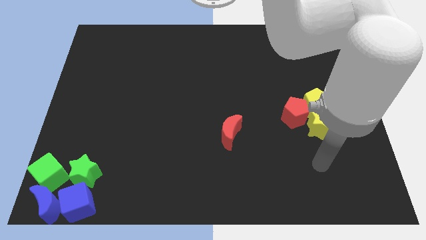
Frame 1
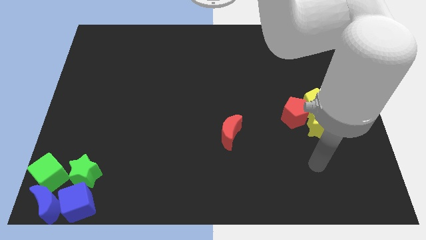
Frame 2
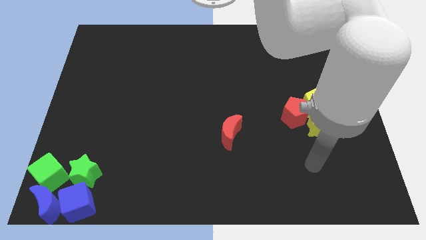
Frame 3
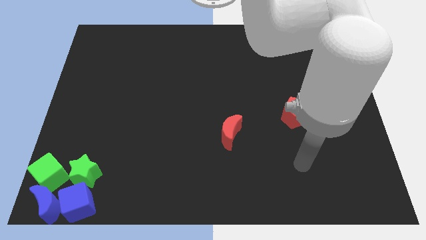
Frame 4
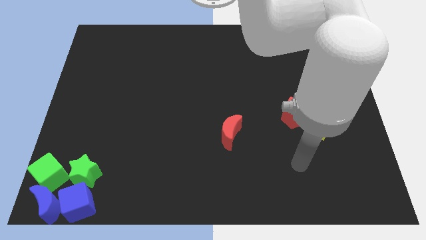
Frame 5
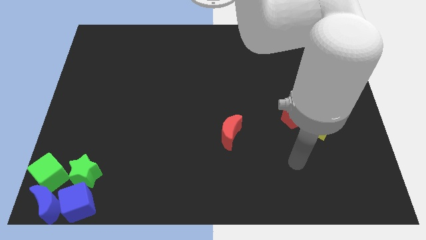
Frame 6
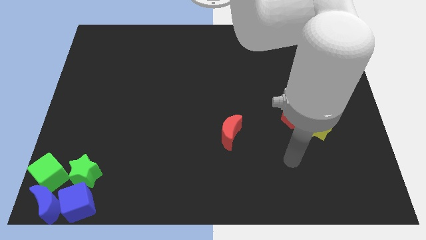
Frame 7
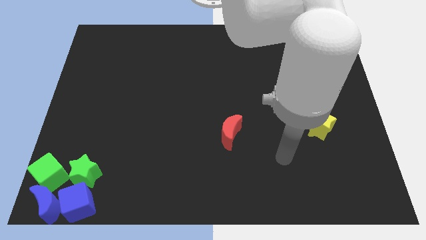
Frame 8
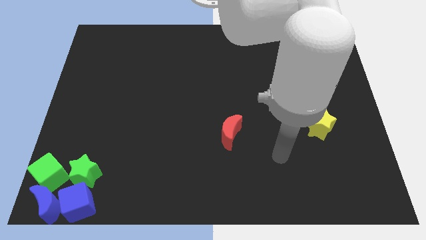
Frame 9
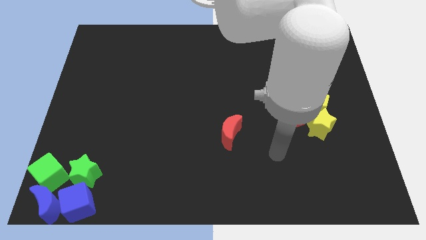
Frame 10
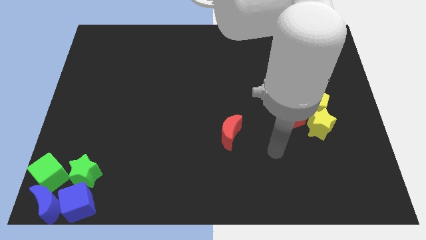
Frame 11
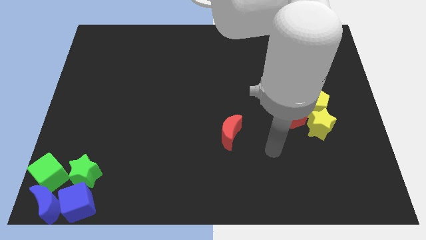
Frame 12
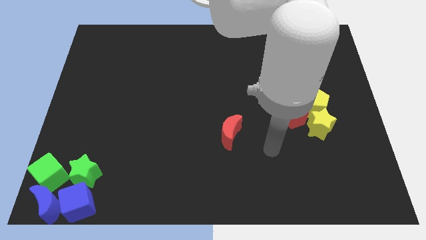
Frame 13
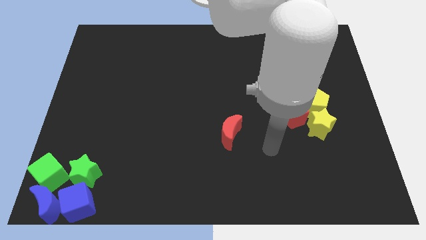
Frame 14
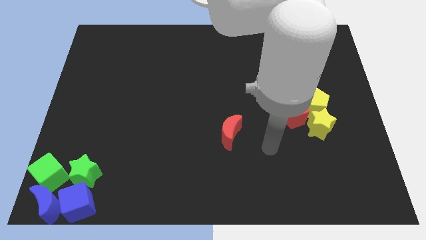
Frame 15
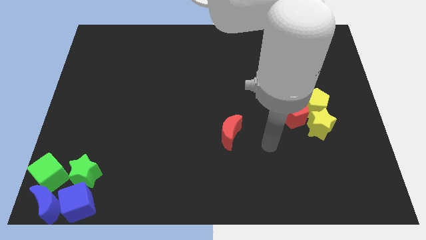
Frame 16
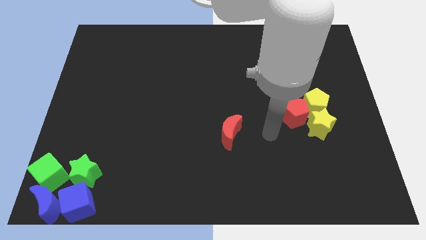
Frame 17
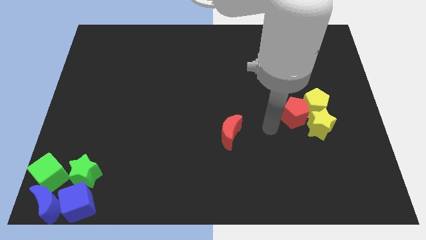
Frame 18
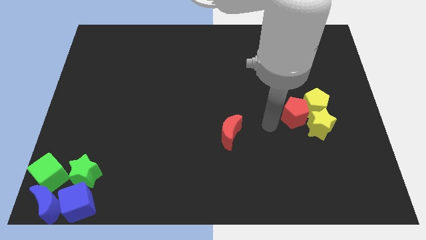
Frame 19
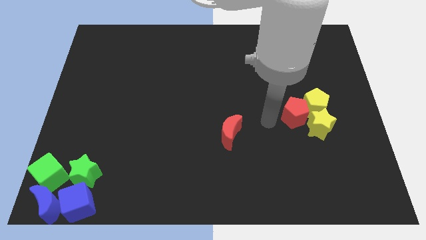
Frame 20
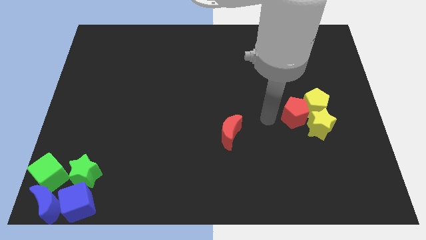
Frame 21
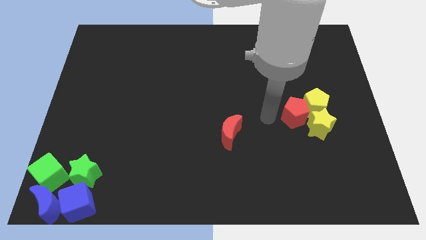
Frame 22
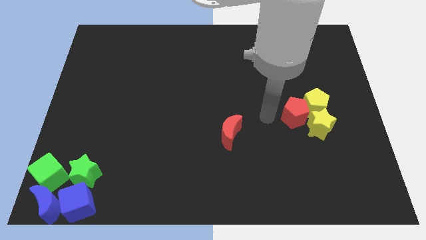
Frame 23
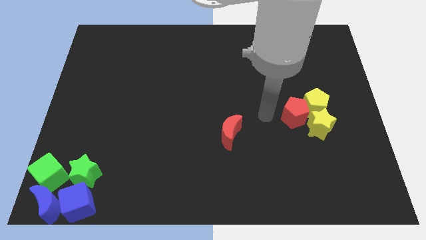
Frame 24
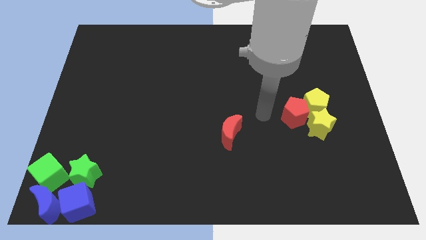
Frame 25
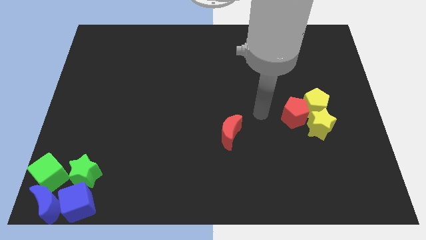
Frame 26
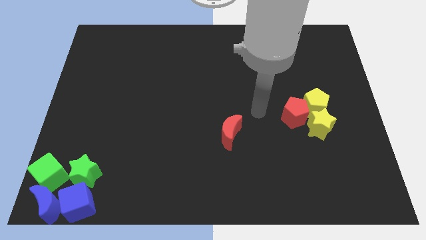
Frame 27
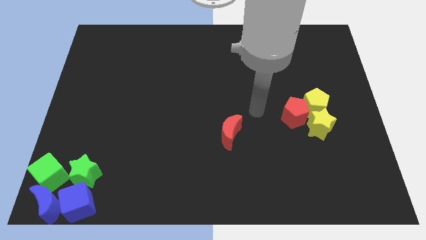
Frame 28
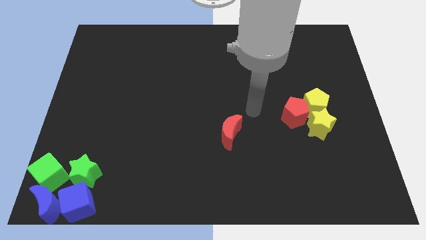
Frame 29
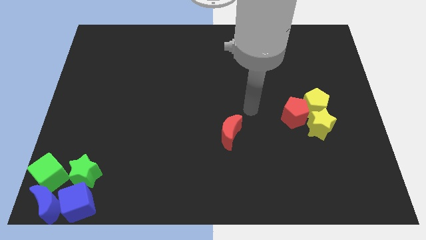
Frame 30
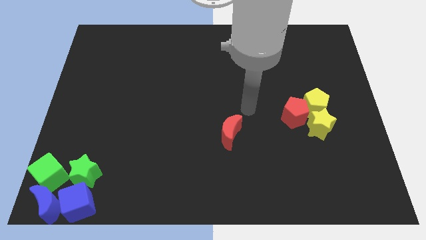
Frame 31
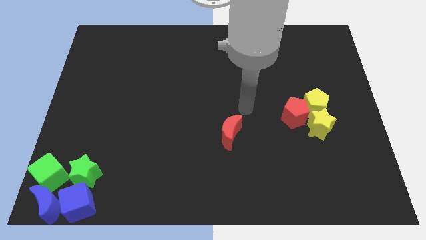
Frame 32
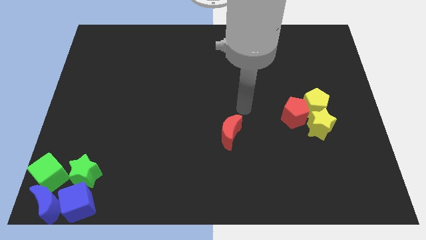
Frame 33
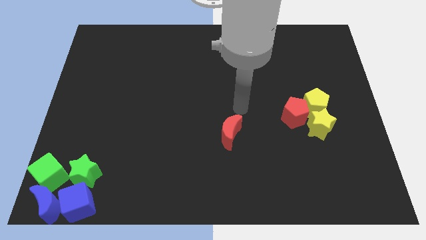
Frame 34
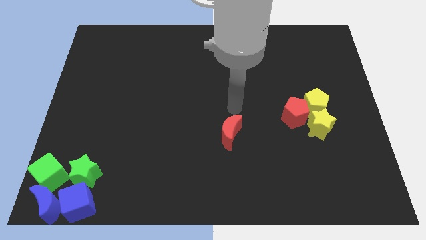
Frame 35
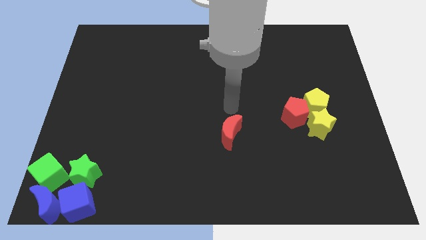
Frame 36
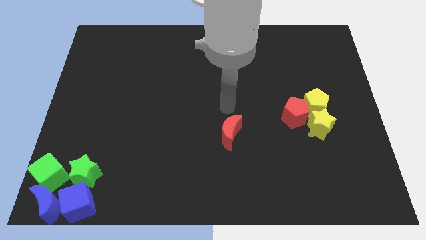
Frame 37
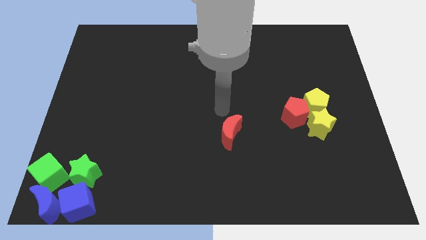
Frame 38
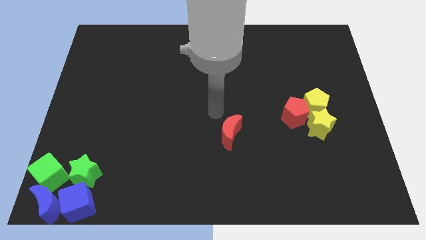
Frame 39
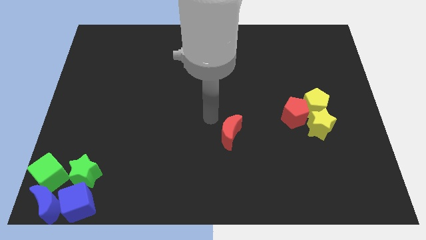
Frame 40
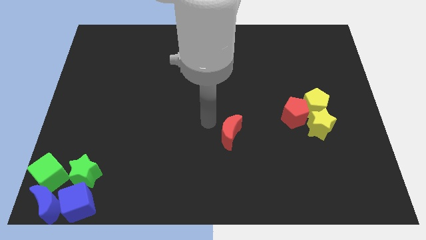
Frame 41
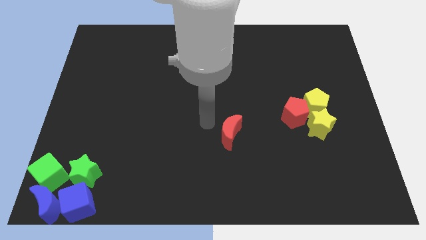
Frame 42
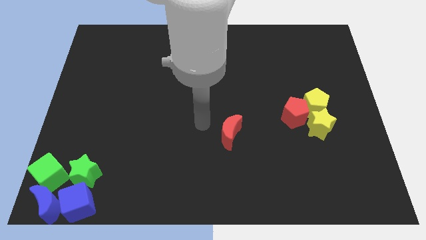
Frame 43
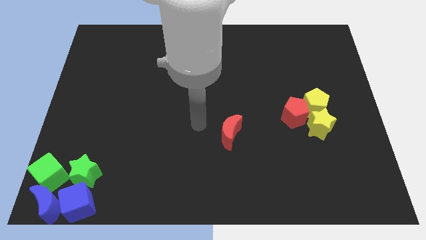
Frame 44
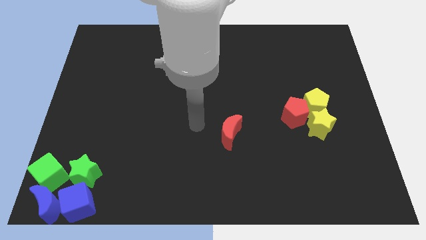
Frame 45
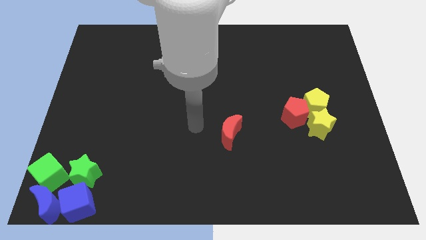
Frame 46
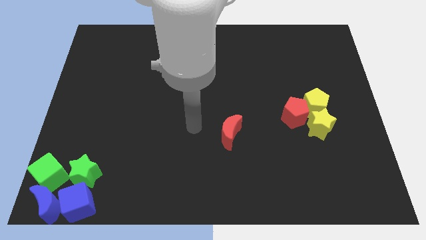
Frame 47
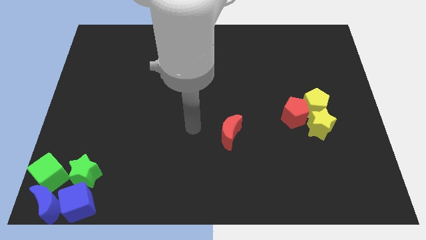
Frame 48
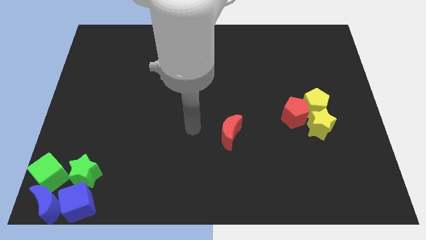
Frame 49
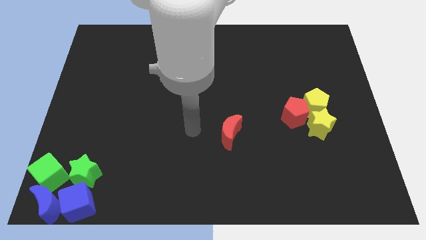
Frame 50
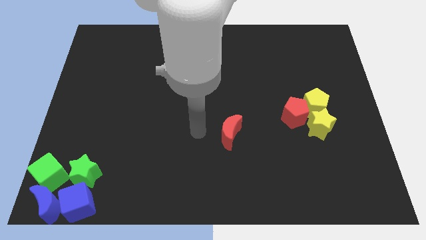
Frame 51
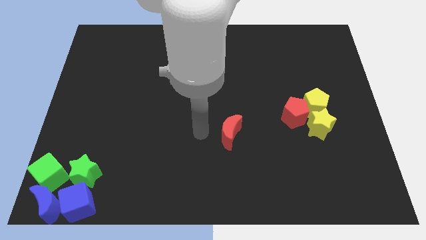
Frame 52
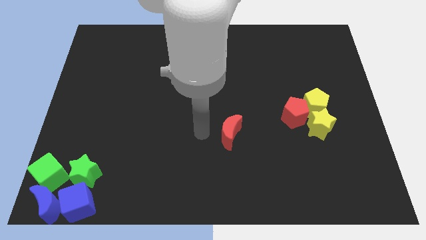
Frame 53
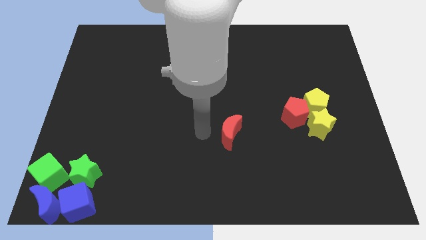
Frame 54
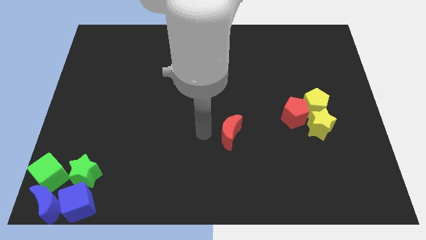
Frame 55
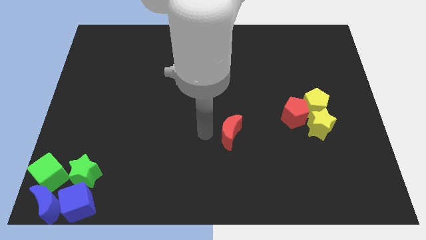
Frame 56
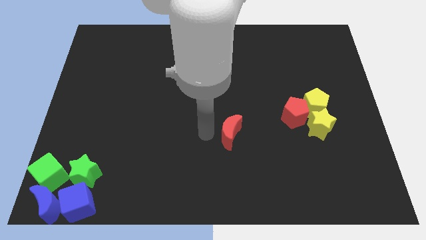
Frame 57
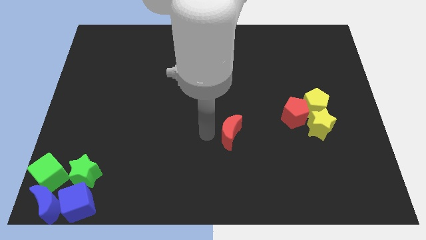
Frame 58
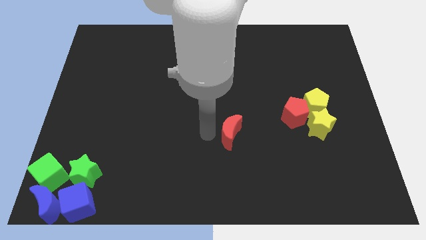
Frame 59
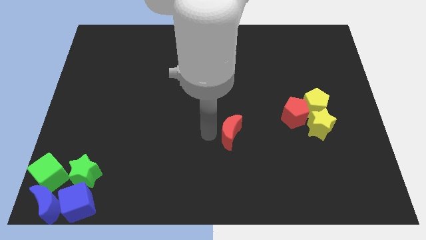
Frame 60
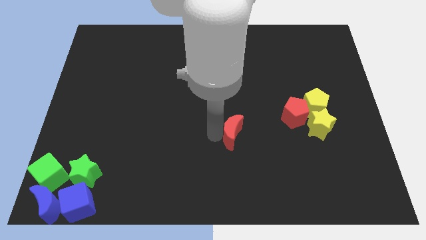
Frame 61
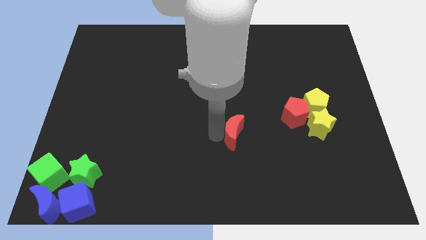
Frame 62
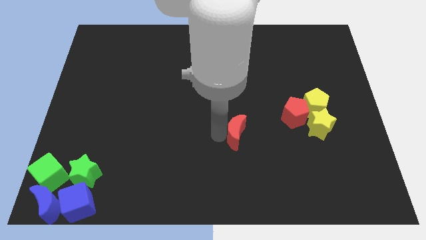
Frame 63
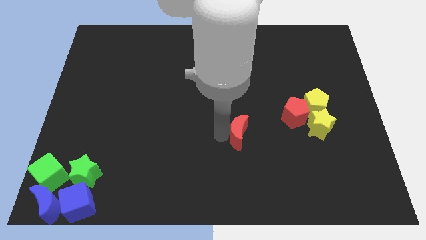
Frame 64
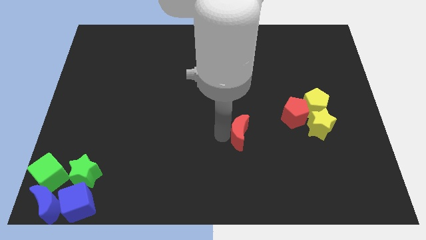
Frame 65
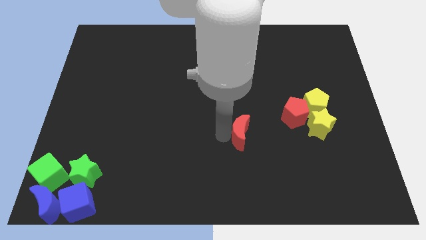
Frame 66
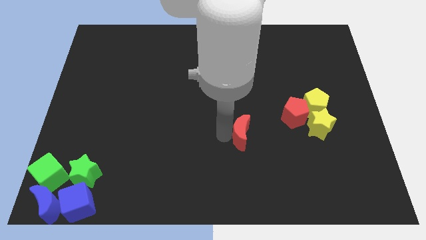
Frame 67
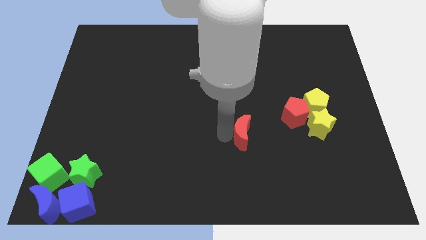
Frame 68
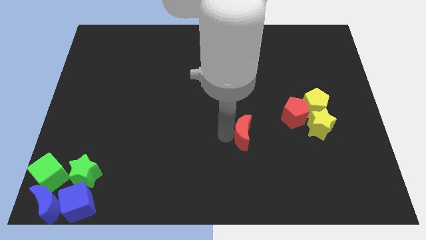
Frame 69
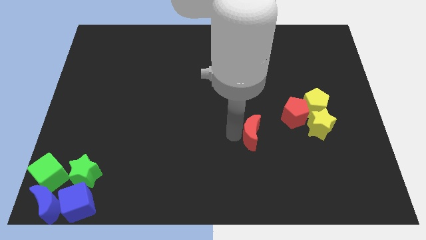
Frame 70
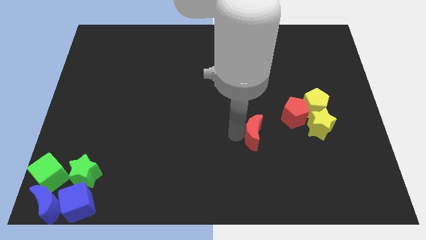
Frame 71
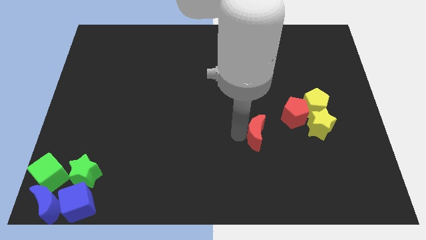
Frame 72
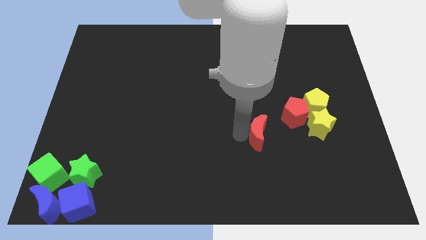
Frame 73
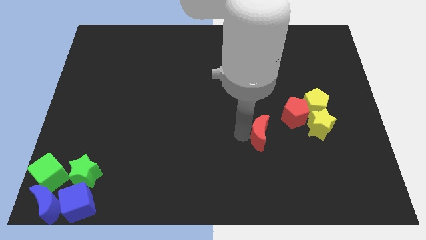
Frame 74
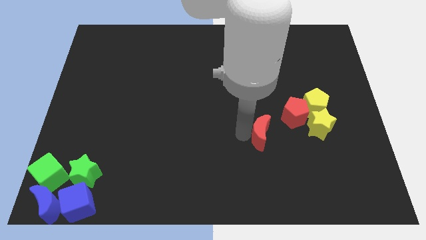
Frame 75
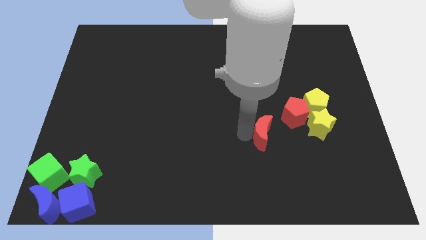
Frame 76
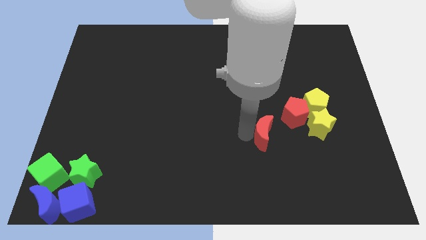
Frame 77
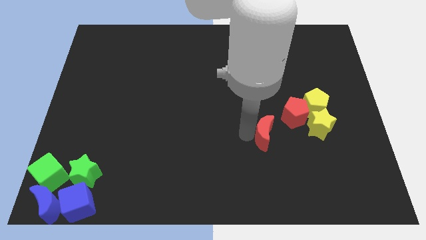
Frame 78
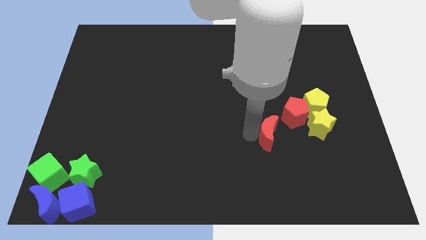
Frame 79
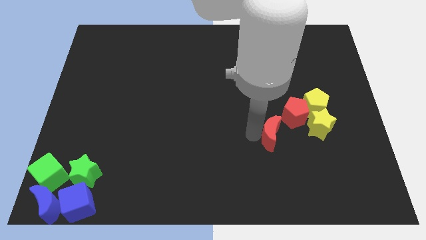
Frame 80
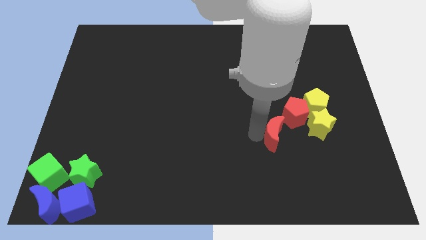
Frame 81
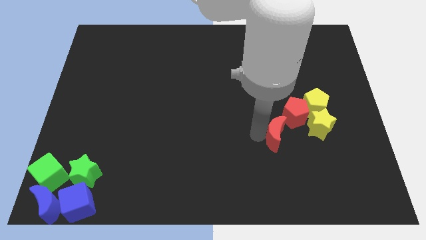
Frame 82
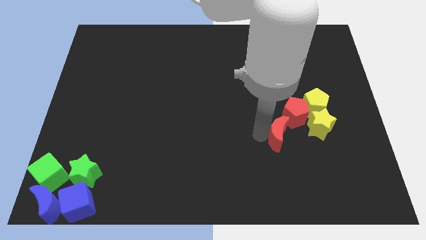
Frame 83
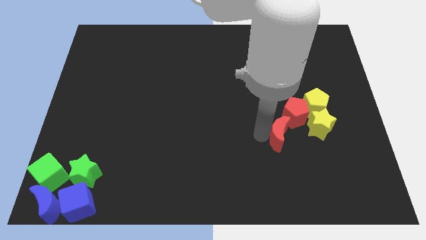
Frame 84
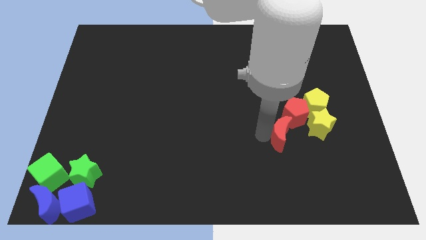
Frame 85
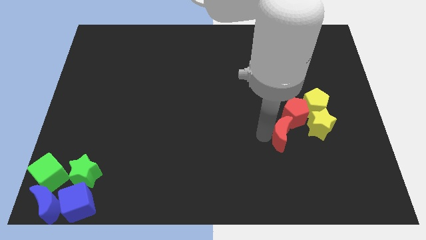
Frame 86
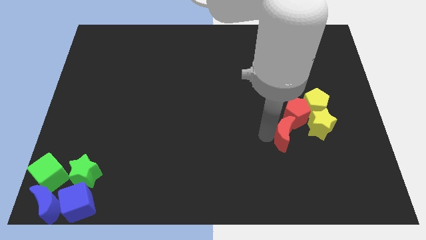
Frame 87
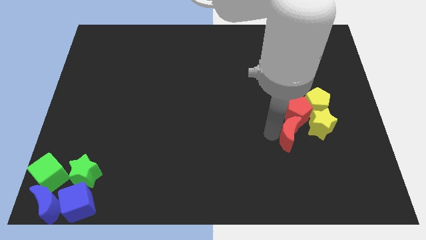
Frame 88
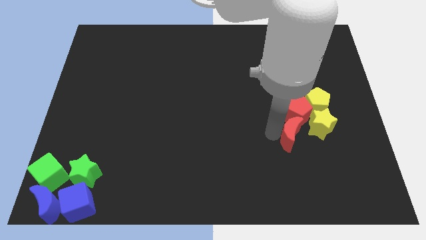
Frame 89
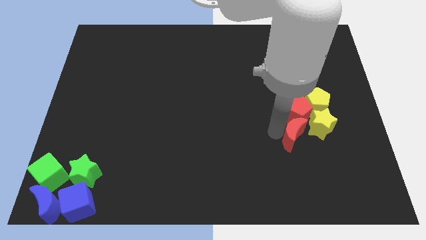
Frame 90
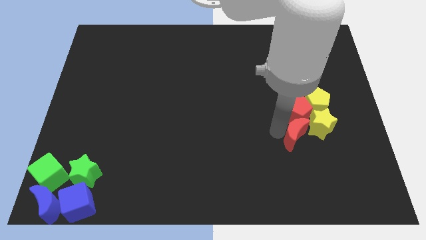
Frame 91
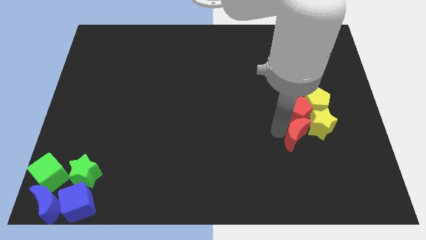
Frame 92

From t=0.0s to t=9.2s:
push red crescent into the group of blocks
